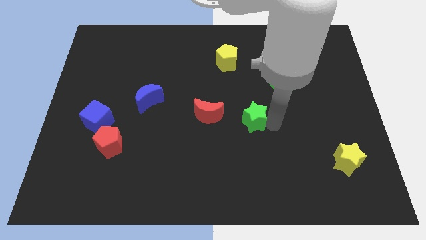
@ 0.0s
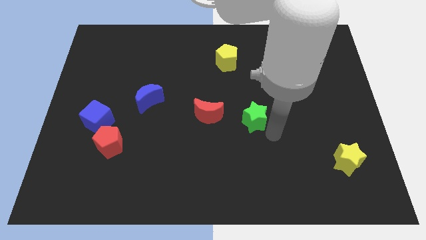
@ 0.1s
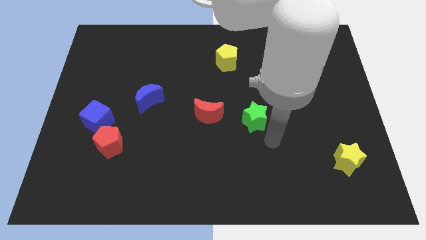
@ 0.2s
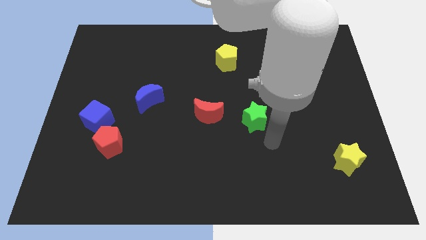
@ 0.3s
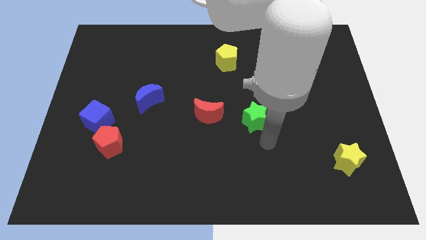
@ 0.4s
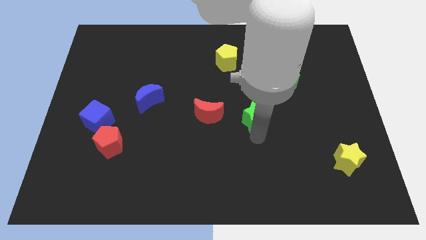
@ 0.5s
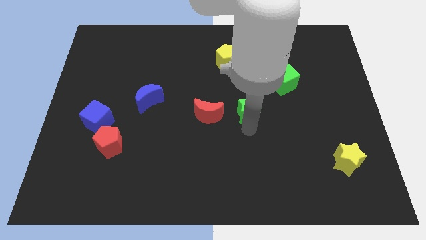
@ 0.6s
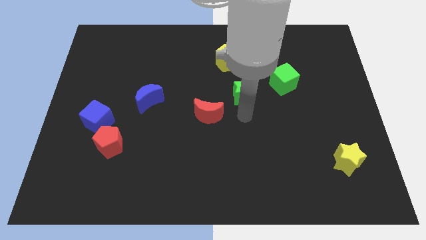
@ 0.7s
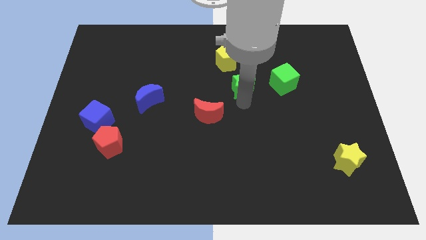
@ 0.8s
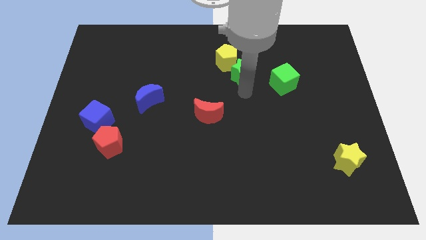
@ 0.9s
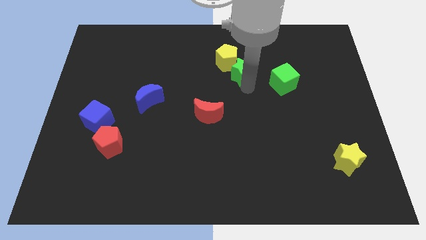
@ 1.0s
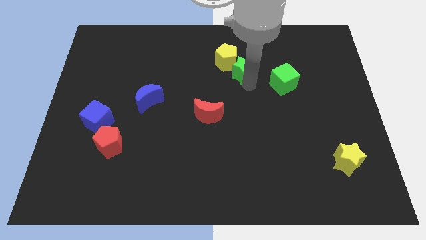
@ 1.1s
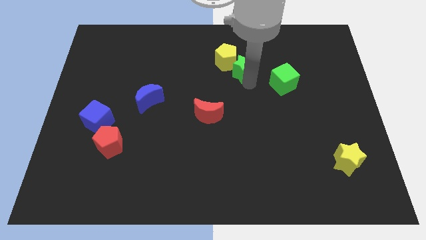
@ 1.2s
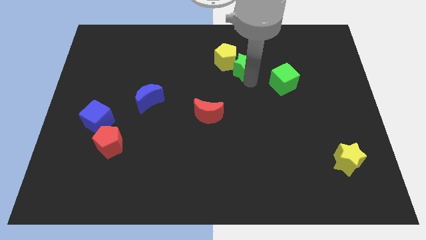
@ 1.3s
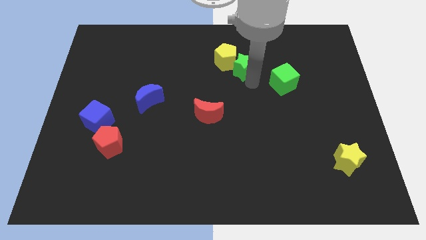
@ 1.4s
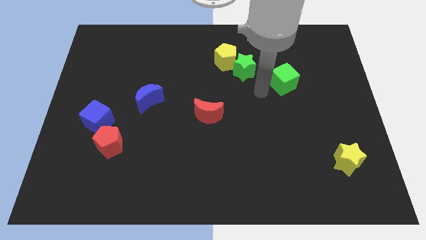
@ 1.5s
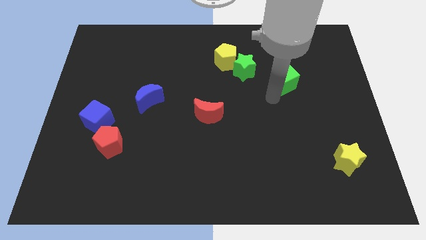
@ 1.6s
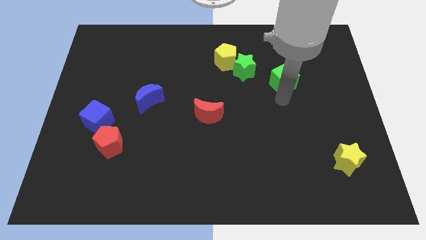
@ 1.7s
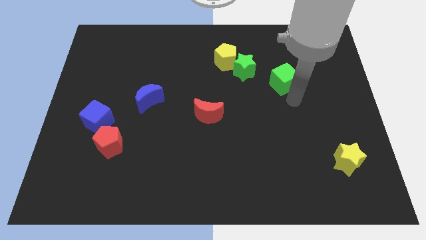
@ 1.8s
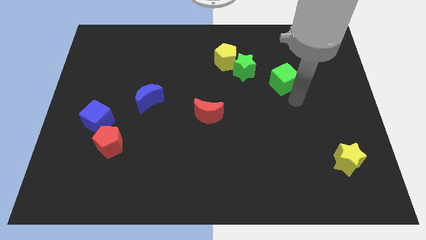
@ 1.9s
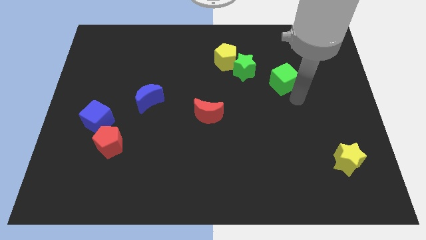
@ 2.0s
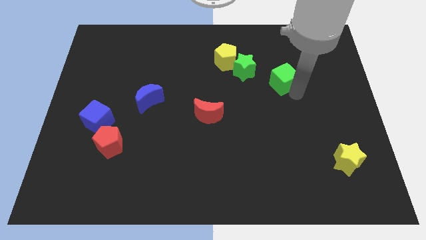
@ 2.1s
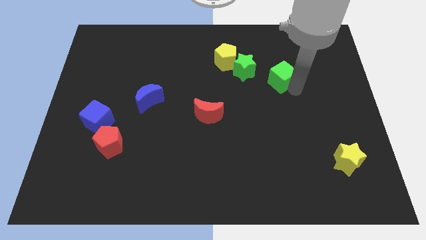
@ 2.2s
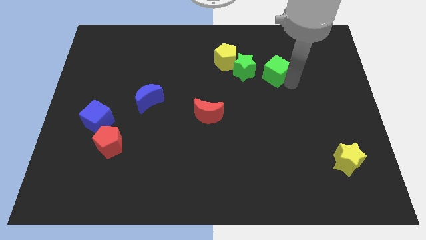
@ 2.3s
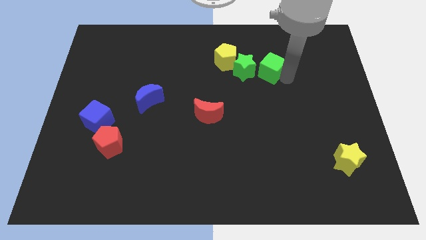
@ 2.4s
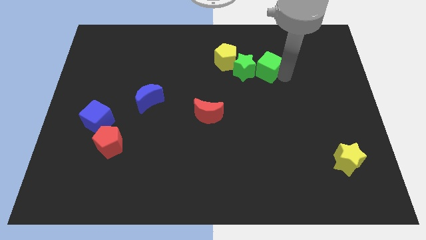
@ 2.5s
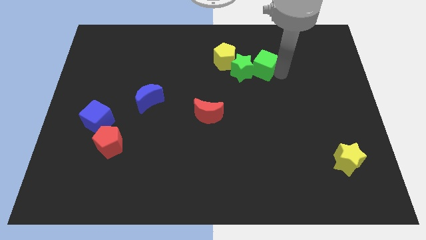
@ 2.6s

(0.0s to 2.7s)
push the green blocks into the yellow pentagon

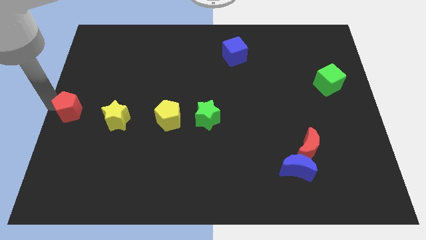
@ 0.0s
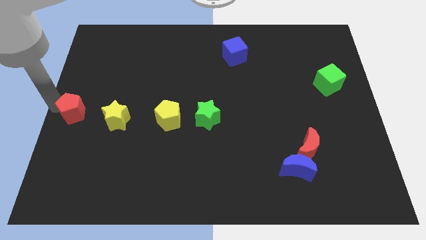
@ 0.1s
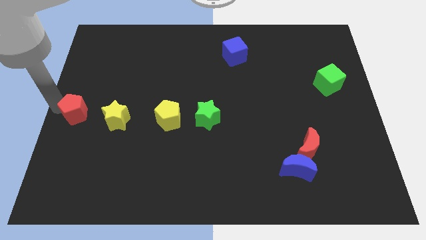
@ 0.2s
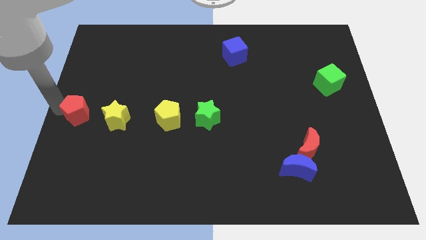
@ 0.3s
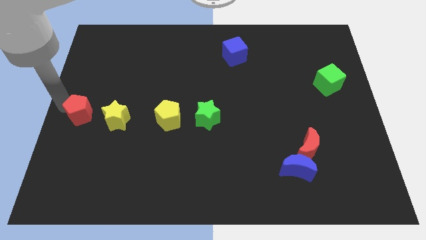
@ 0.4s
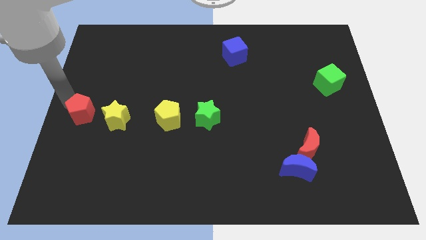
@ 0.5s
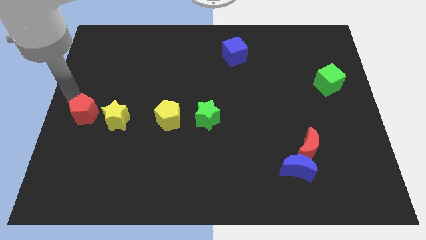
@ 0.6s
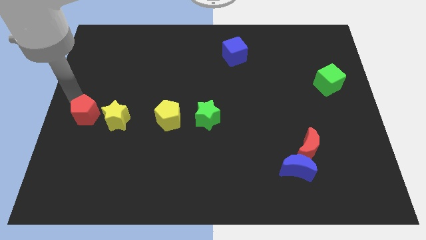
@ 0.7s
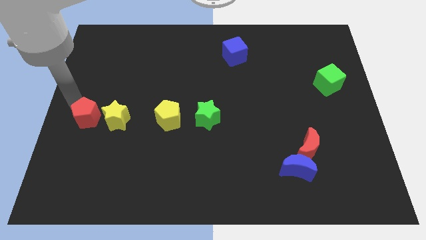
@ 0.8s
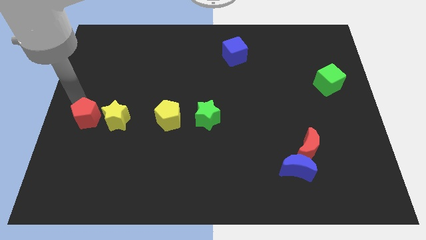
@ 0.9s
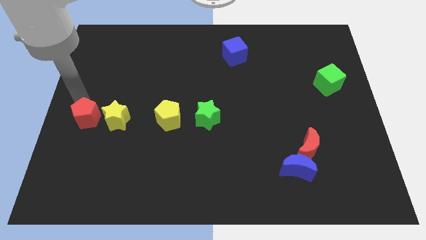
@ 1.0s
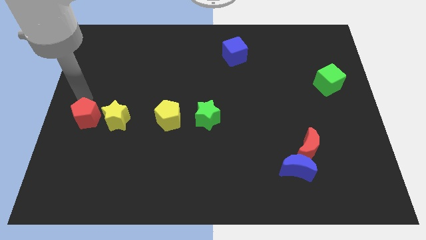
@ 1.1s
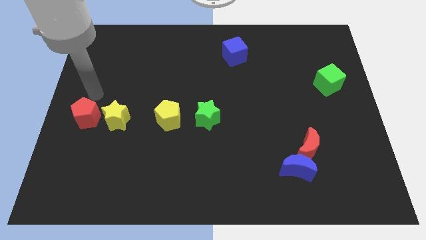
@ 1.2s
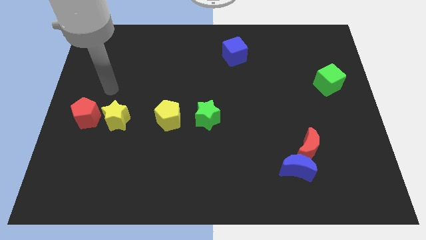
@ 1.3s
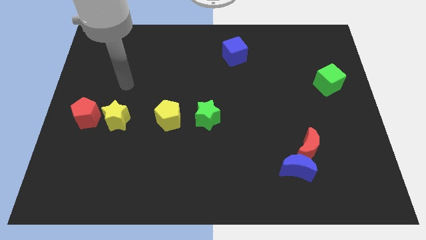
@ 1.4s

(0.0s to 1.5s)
place the red pentagon to the left of the yellow star

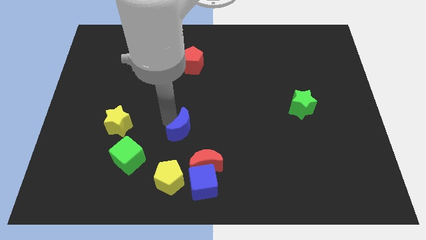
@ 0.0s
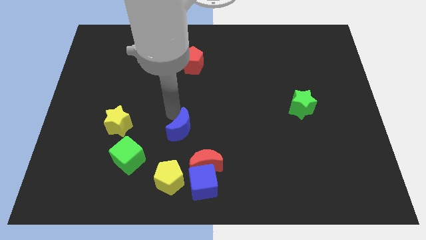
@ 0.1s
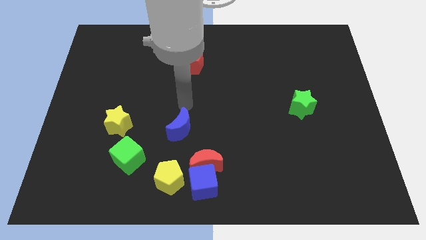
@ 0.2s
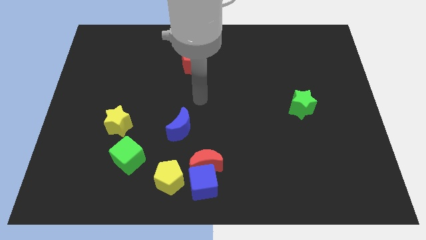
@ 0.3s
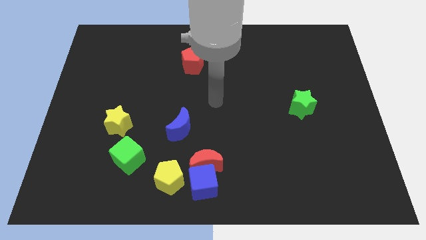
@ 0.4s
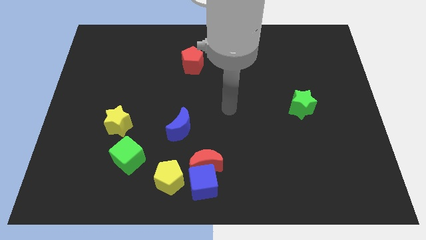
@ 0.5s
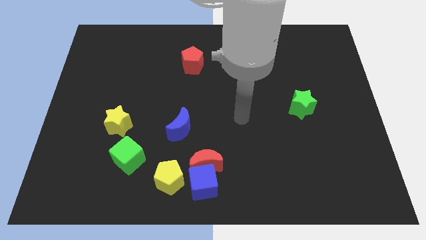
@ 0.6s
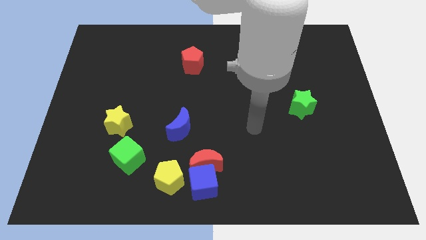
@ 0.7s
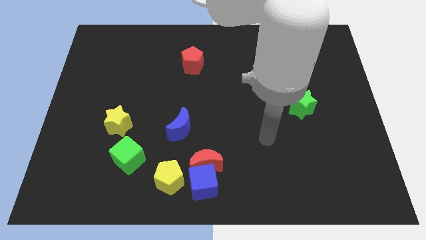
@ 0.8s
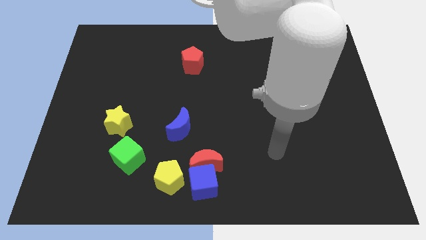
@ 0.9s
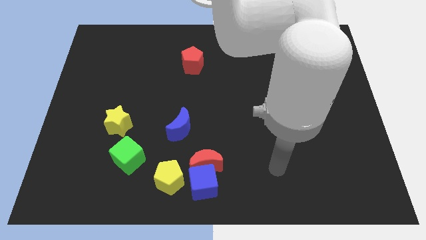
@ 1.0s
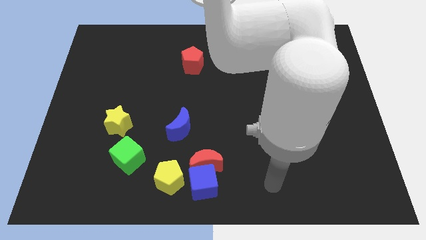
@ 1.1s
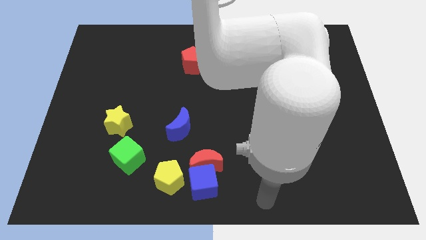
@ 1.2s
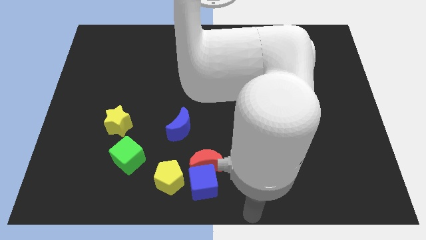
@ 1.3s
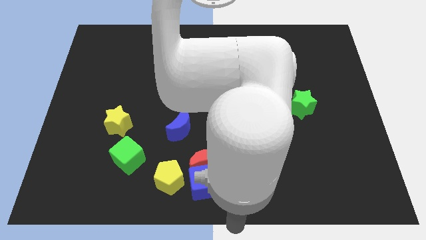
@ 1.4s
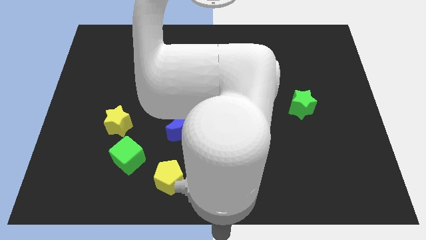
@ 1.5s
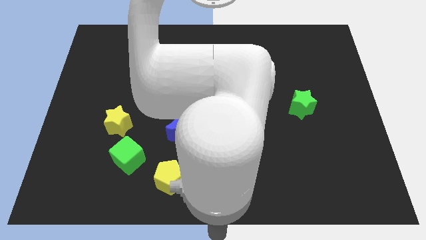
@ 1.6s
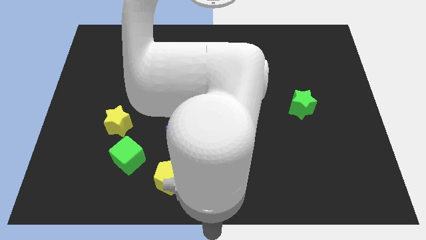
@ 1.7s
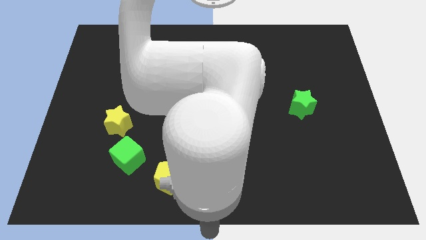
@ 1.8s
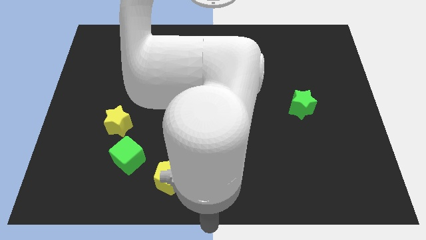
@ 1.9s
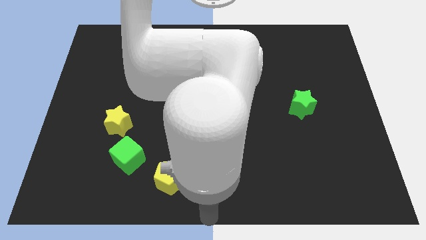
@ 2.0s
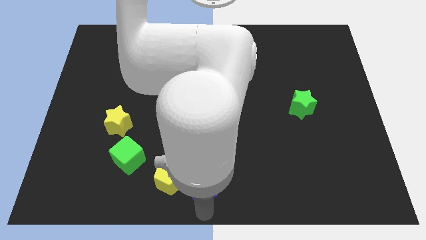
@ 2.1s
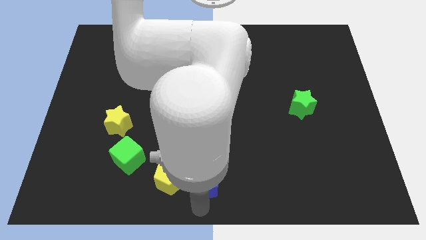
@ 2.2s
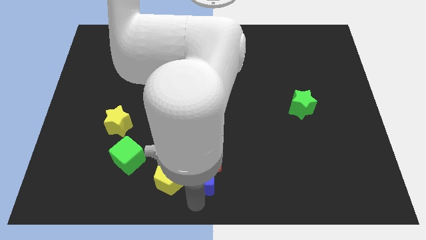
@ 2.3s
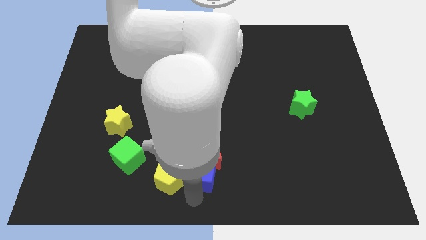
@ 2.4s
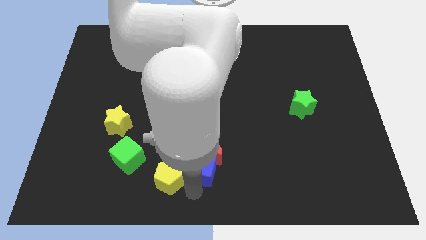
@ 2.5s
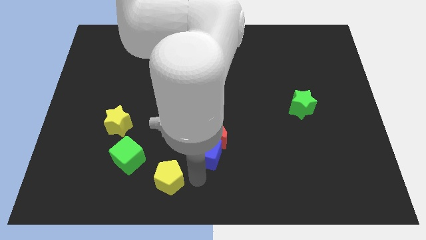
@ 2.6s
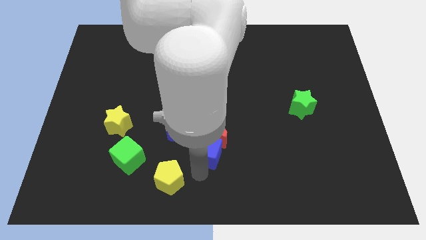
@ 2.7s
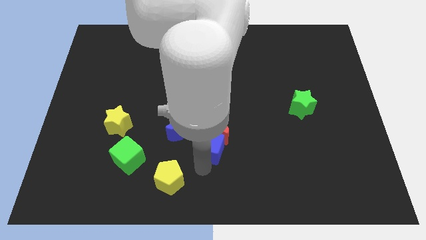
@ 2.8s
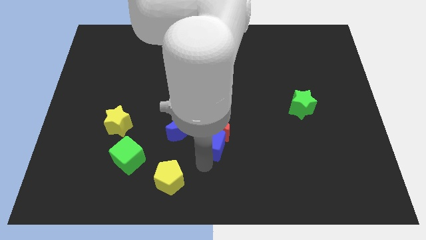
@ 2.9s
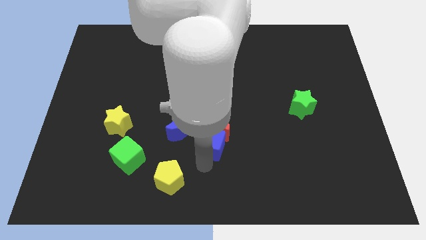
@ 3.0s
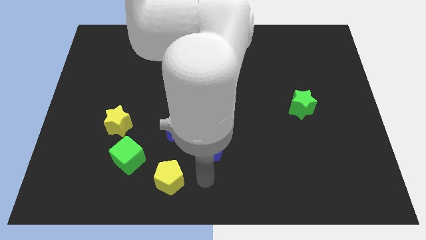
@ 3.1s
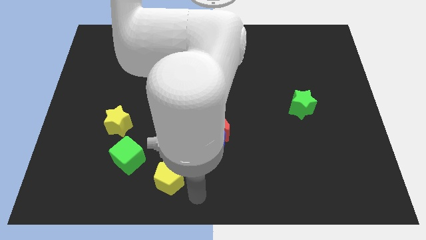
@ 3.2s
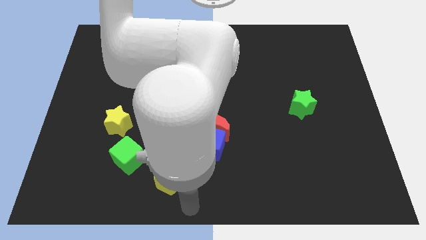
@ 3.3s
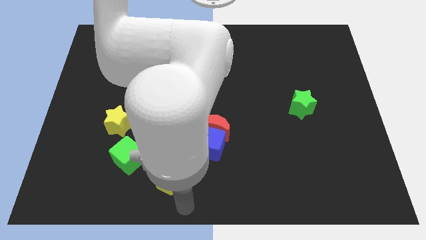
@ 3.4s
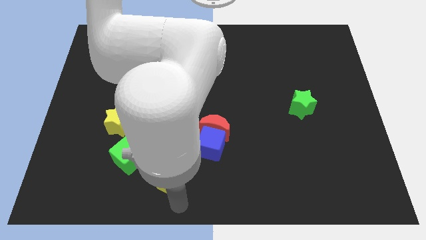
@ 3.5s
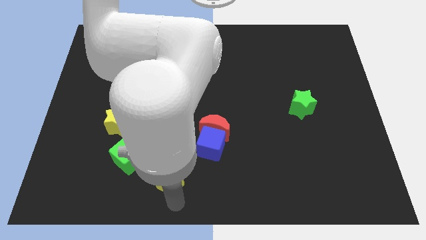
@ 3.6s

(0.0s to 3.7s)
drag the blue cube along with the red moon towards the center

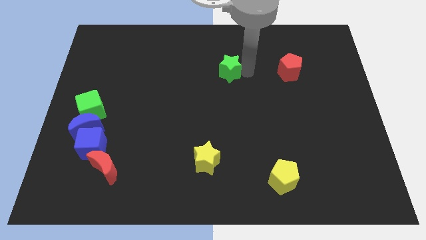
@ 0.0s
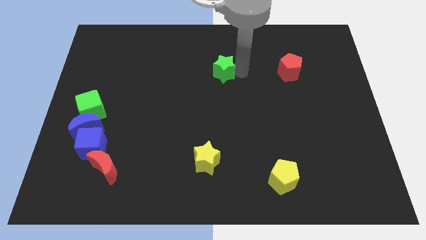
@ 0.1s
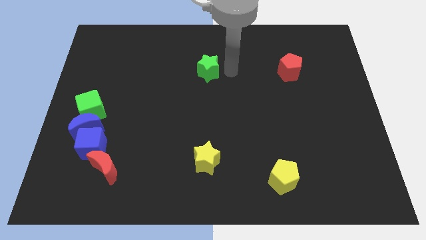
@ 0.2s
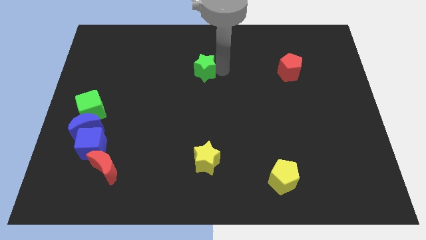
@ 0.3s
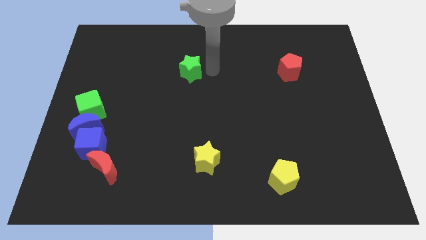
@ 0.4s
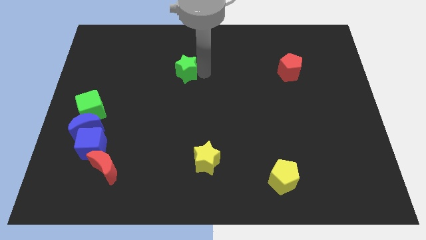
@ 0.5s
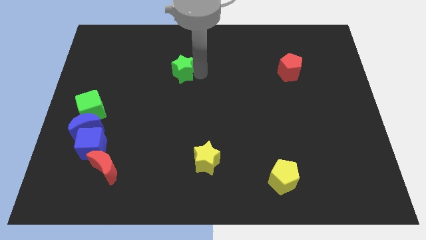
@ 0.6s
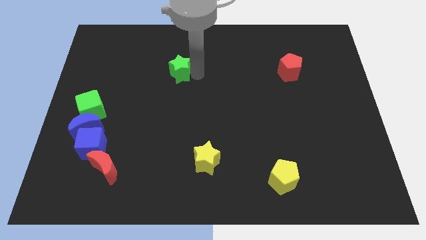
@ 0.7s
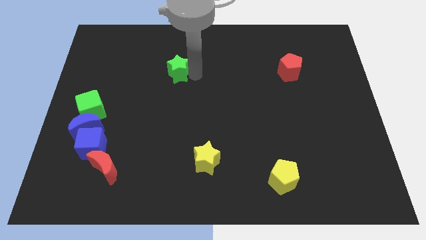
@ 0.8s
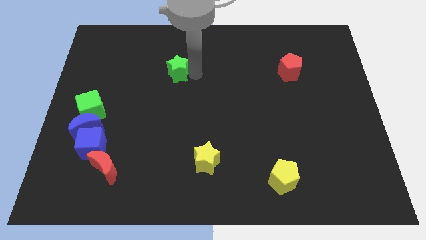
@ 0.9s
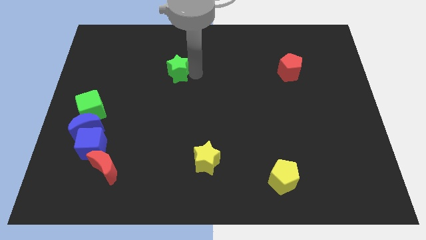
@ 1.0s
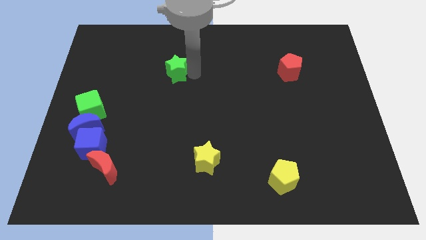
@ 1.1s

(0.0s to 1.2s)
push the green star to the left of the board

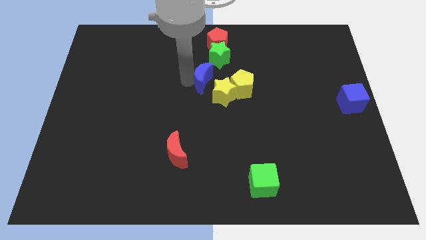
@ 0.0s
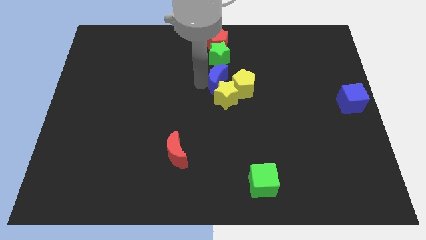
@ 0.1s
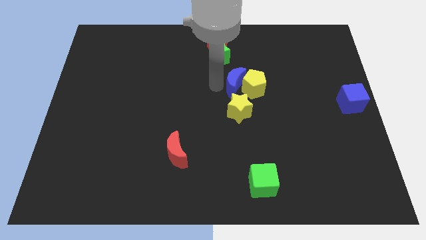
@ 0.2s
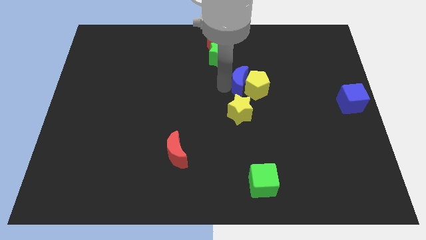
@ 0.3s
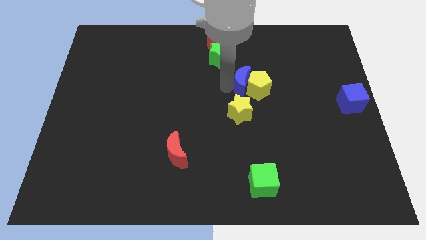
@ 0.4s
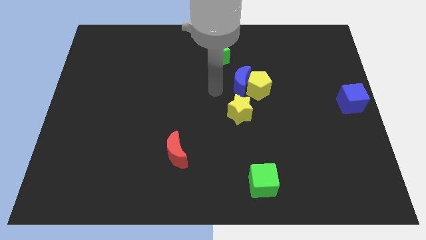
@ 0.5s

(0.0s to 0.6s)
push blue crescent into yellow blocks
